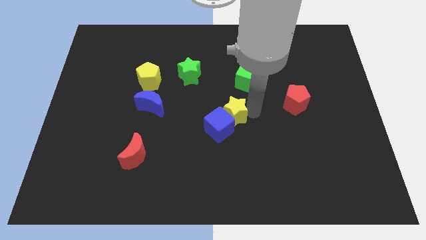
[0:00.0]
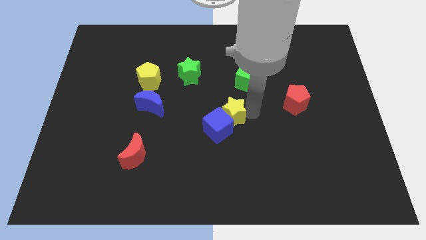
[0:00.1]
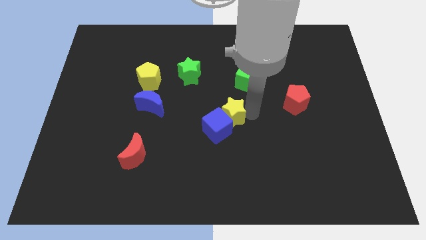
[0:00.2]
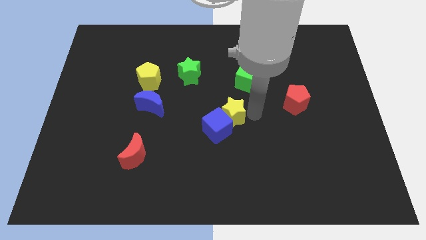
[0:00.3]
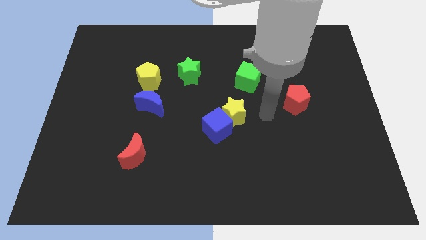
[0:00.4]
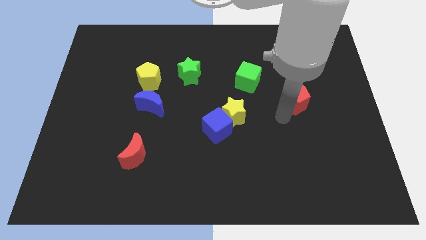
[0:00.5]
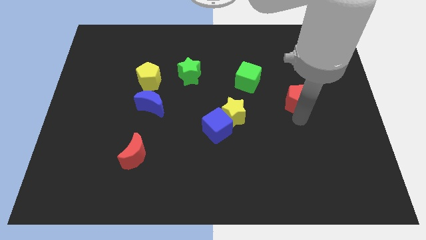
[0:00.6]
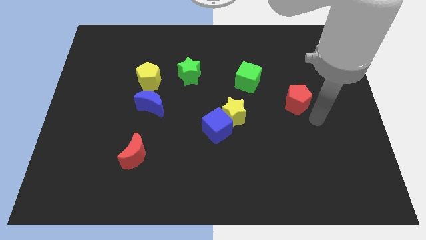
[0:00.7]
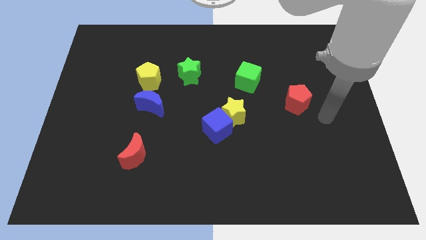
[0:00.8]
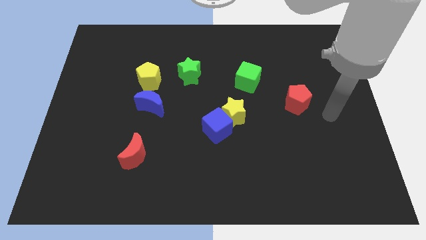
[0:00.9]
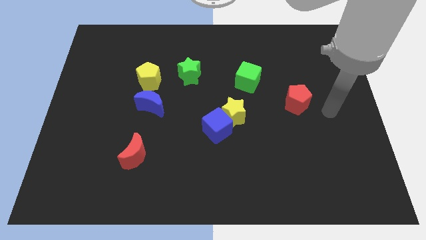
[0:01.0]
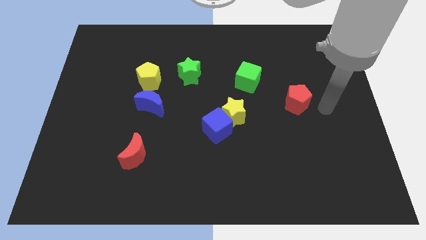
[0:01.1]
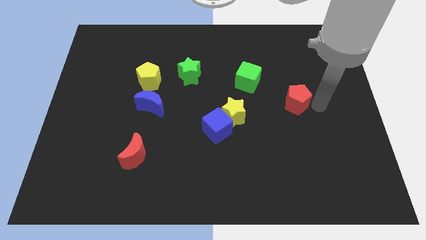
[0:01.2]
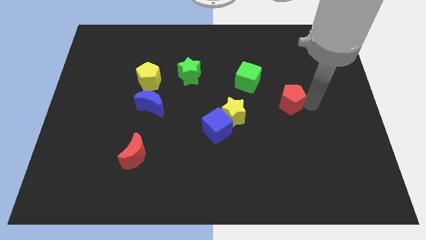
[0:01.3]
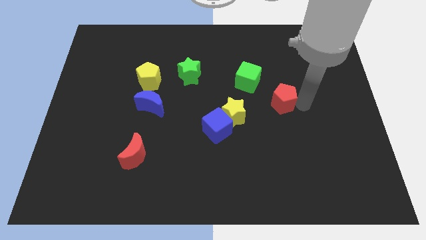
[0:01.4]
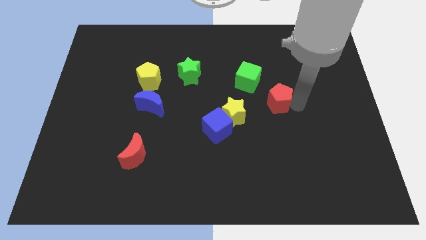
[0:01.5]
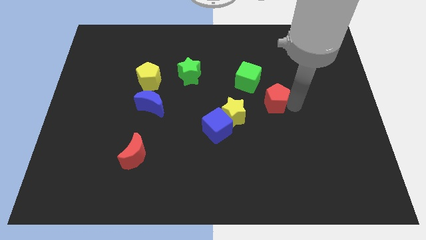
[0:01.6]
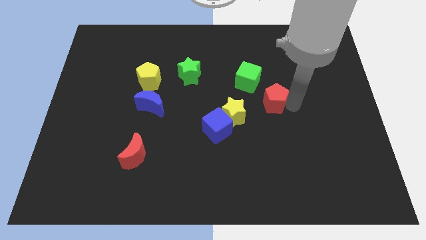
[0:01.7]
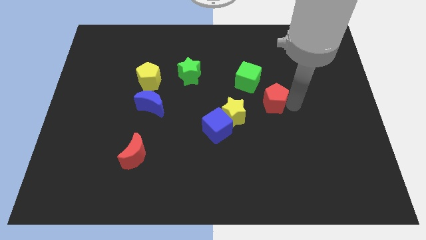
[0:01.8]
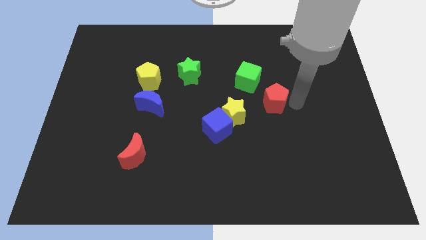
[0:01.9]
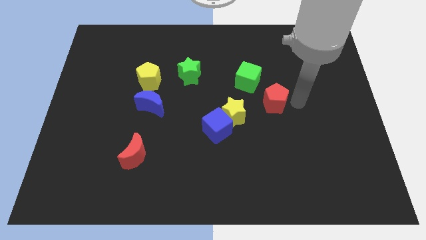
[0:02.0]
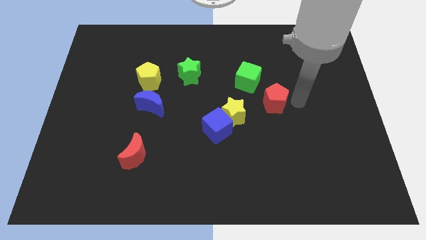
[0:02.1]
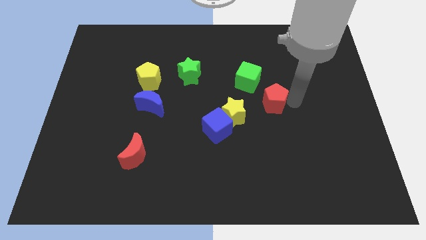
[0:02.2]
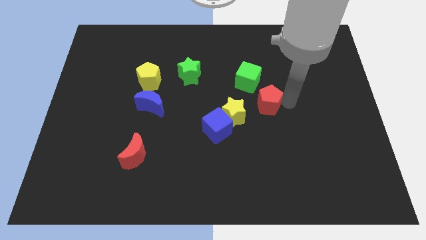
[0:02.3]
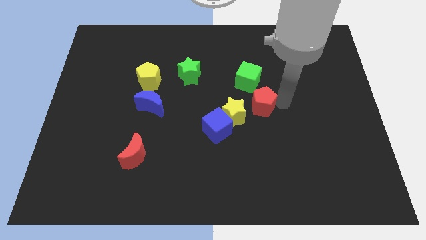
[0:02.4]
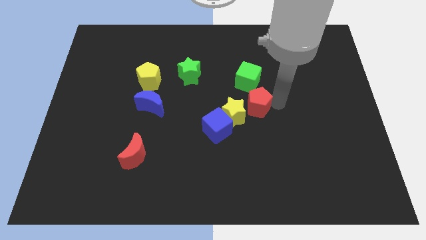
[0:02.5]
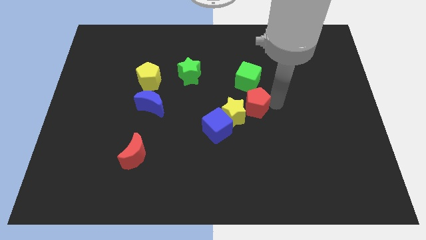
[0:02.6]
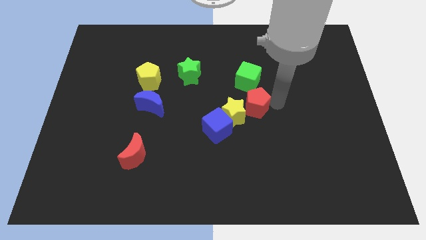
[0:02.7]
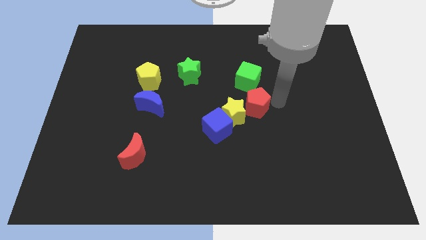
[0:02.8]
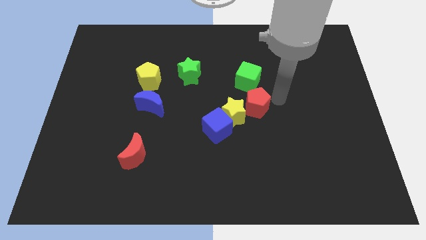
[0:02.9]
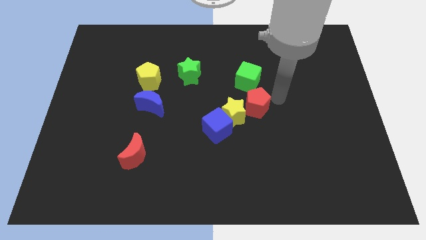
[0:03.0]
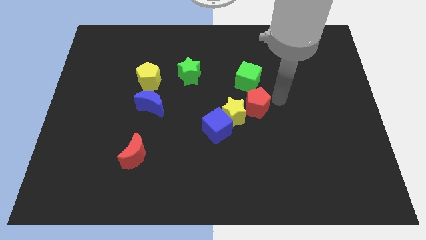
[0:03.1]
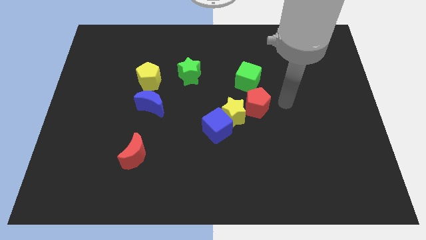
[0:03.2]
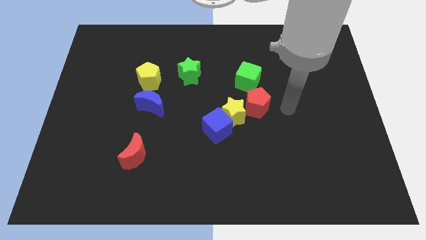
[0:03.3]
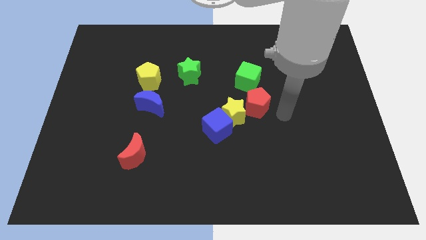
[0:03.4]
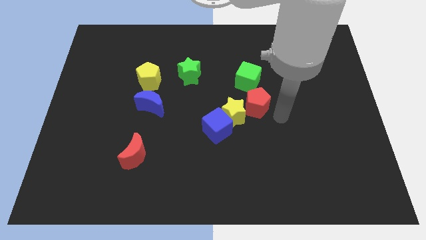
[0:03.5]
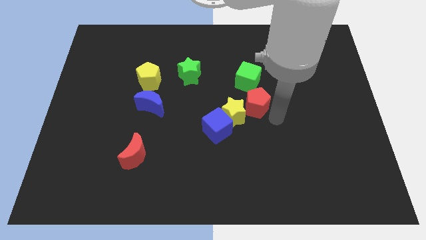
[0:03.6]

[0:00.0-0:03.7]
move the red pentagon right below the green cube

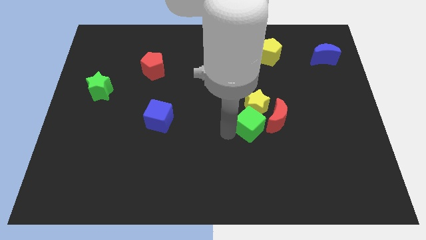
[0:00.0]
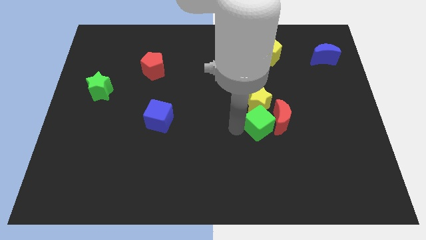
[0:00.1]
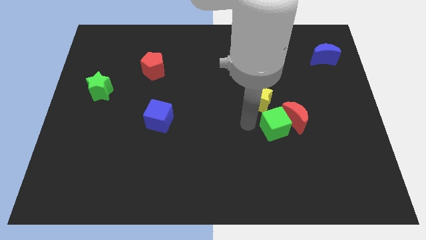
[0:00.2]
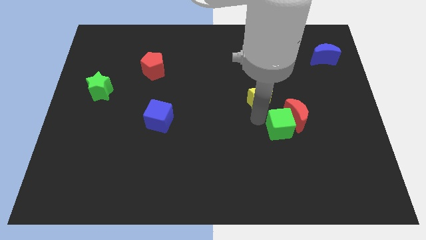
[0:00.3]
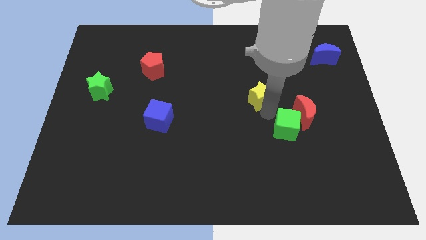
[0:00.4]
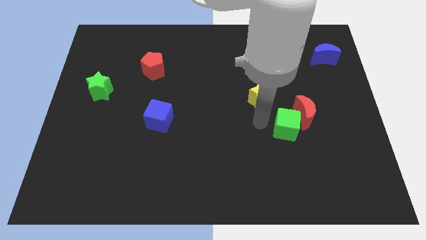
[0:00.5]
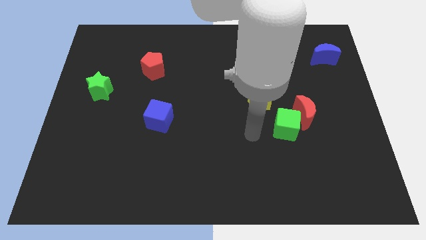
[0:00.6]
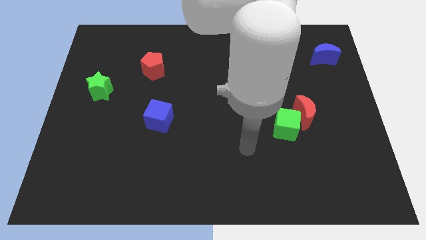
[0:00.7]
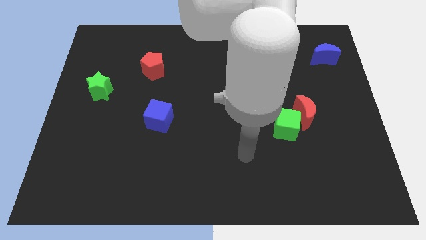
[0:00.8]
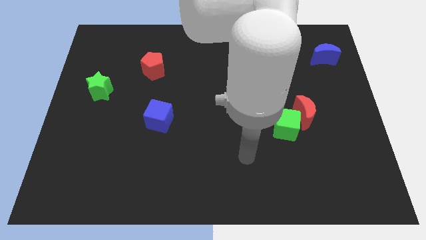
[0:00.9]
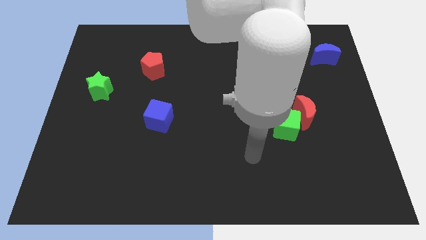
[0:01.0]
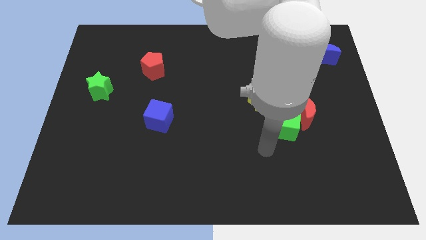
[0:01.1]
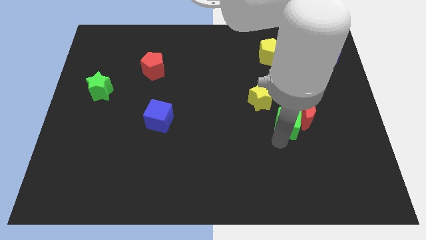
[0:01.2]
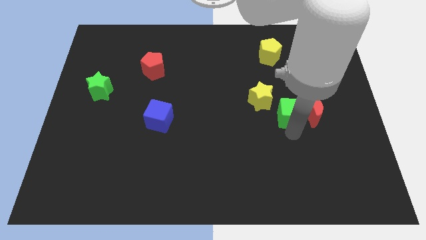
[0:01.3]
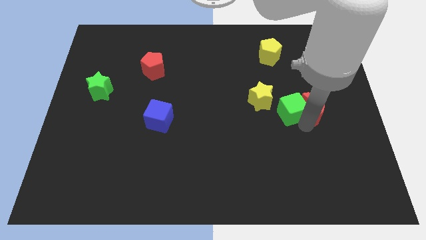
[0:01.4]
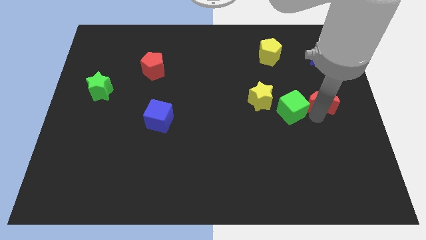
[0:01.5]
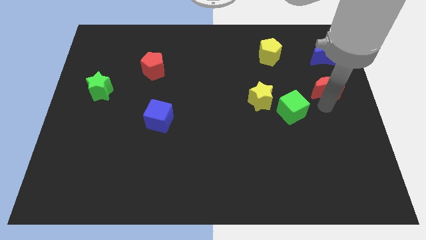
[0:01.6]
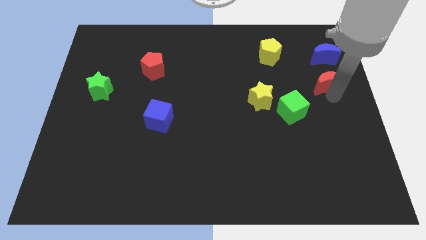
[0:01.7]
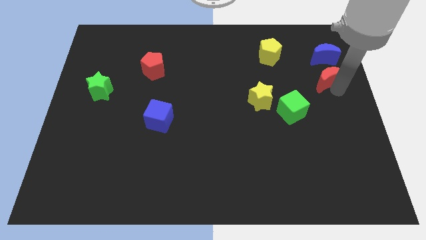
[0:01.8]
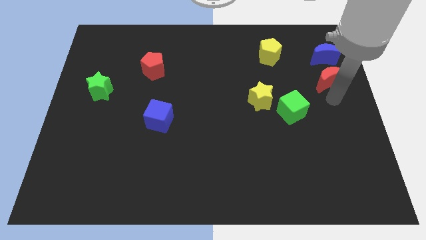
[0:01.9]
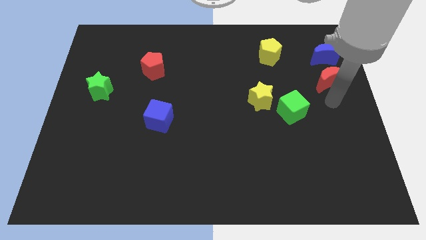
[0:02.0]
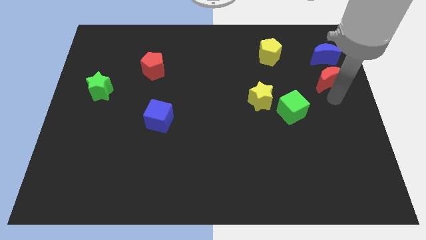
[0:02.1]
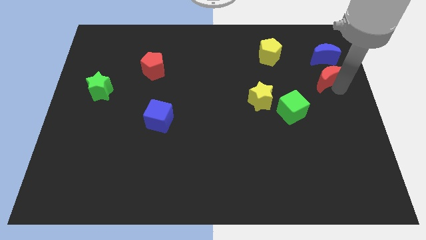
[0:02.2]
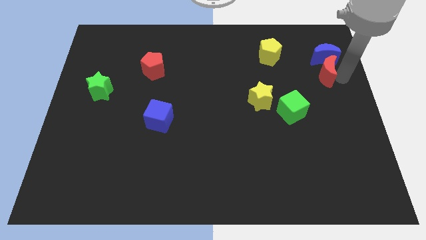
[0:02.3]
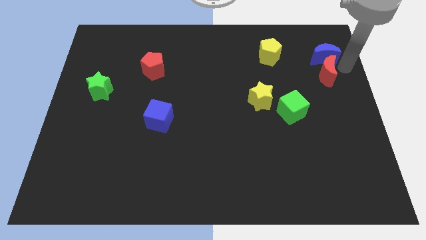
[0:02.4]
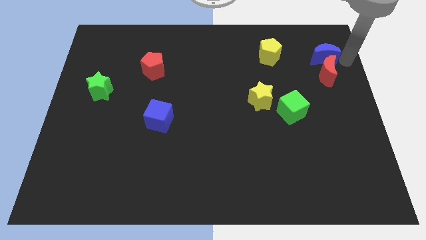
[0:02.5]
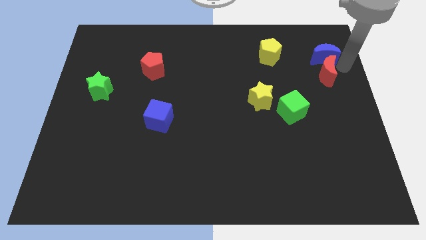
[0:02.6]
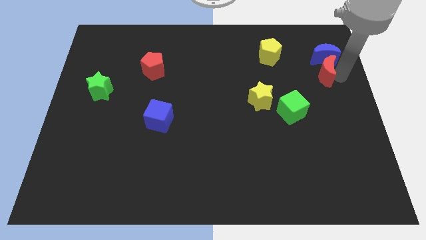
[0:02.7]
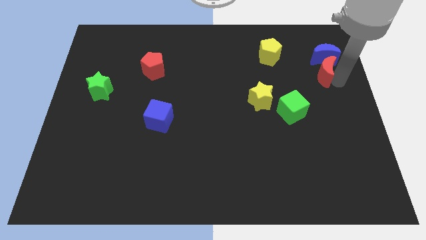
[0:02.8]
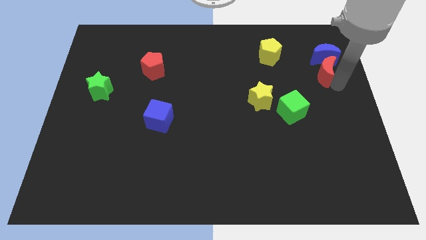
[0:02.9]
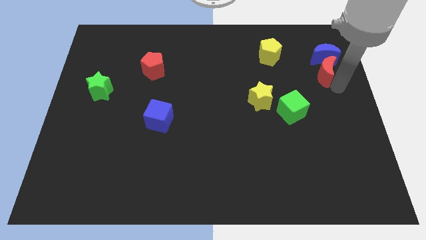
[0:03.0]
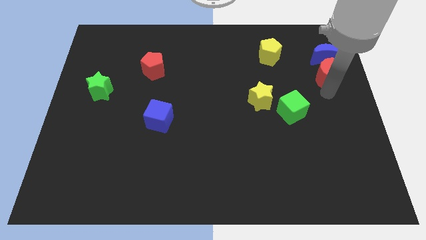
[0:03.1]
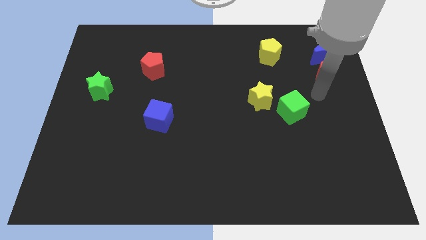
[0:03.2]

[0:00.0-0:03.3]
slide the red moon close to the blue moon

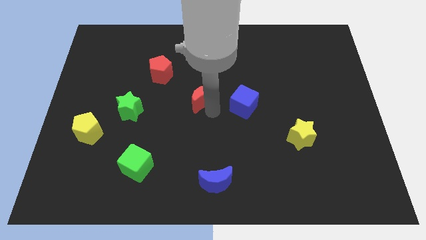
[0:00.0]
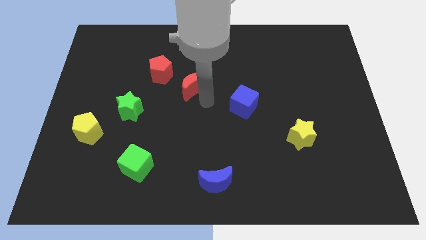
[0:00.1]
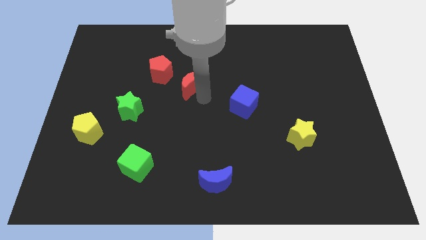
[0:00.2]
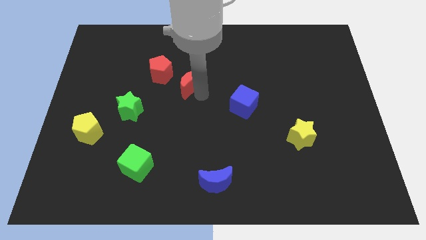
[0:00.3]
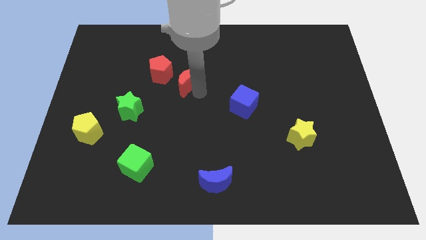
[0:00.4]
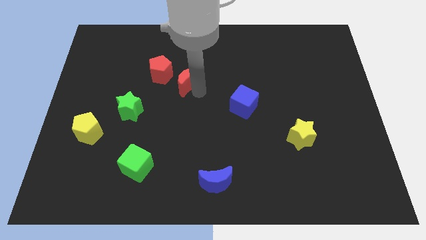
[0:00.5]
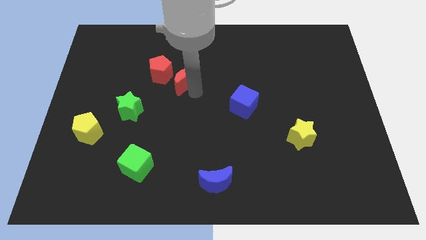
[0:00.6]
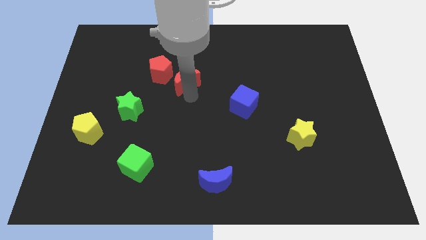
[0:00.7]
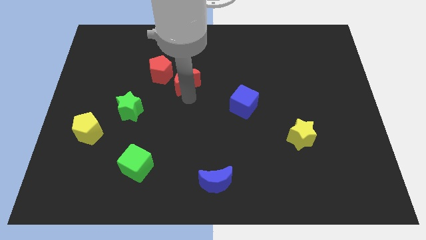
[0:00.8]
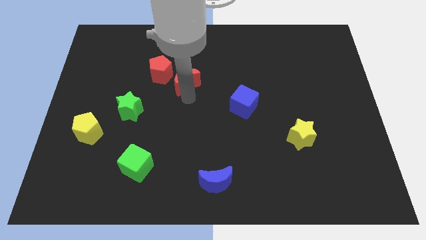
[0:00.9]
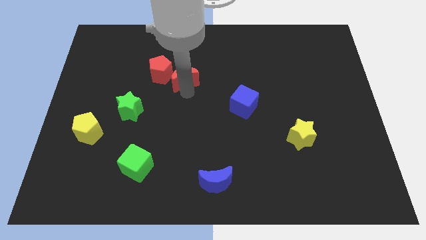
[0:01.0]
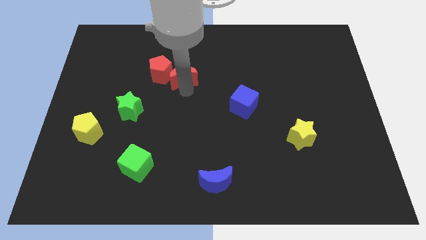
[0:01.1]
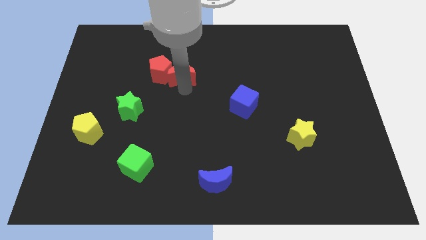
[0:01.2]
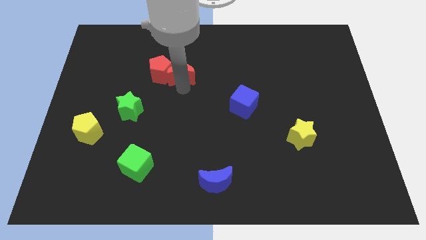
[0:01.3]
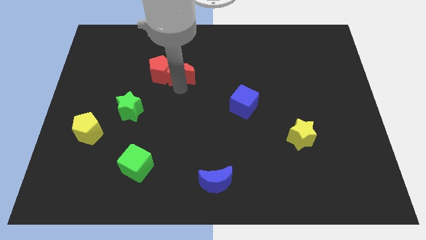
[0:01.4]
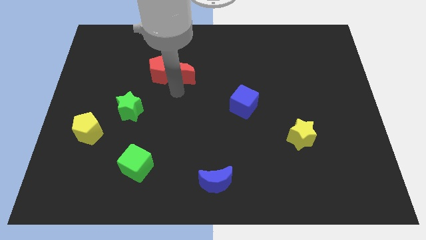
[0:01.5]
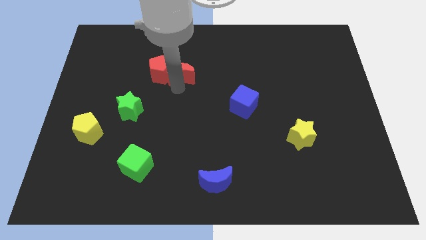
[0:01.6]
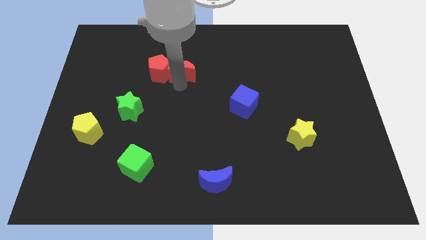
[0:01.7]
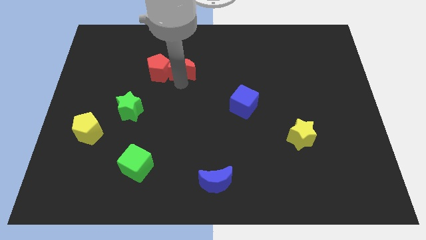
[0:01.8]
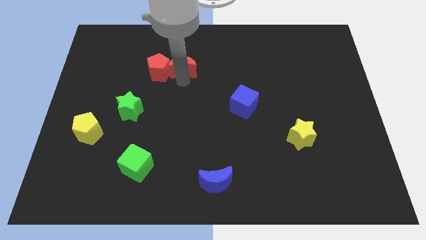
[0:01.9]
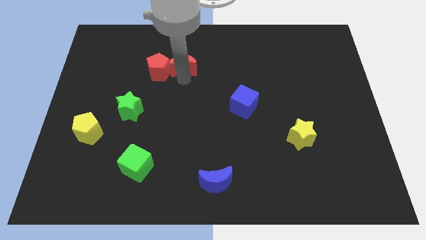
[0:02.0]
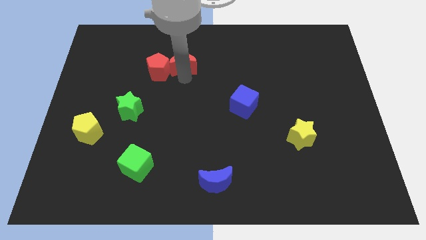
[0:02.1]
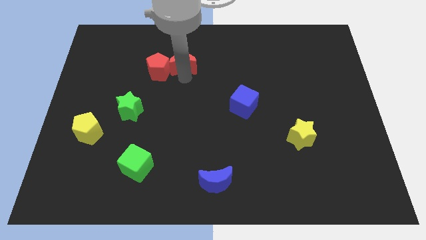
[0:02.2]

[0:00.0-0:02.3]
push the red crescent into the red pentagon
